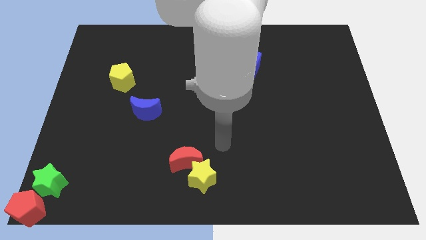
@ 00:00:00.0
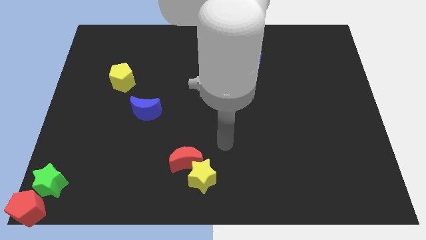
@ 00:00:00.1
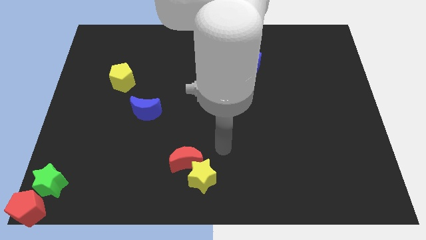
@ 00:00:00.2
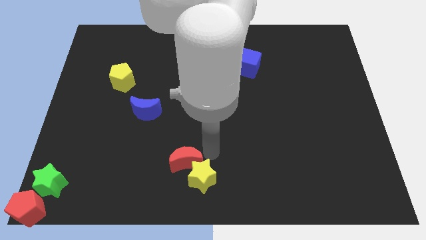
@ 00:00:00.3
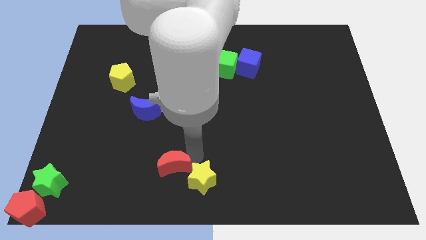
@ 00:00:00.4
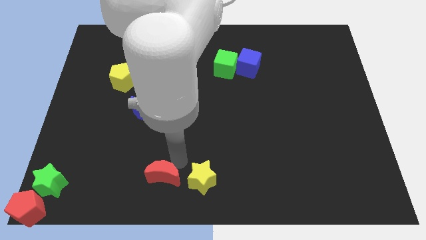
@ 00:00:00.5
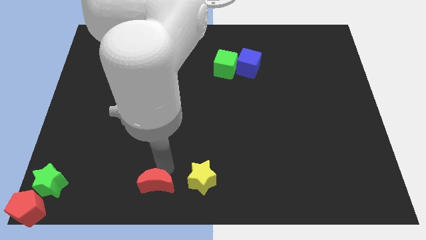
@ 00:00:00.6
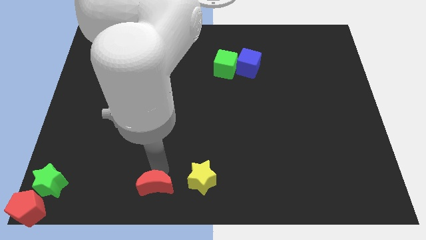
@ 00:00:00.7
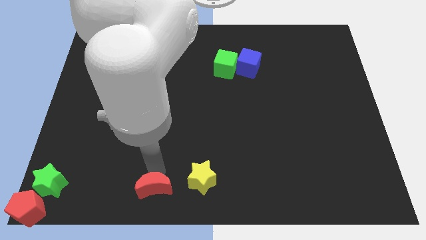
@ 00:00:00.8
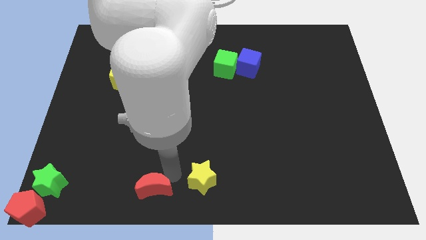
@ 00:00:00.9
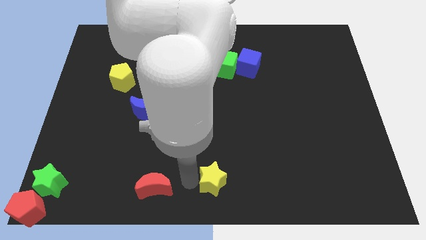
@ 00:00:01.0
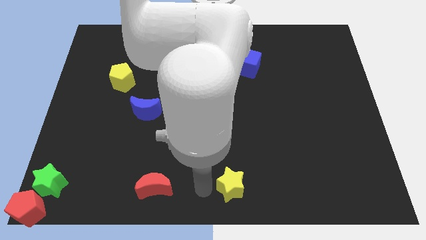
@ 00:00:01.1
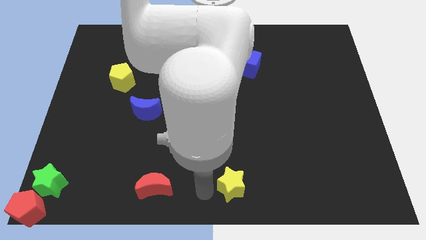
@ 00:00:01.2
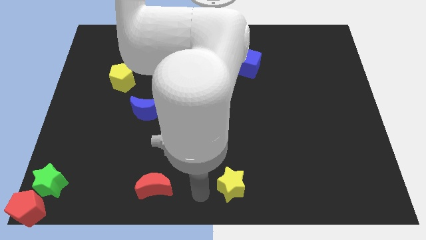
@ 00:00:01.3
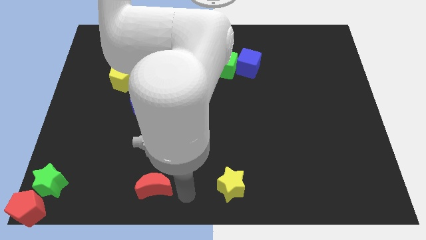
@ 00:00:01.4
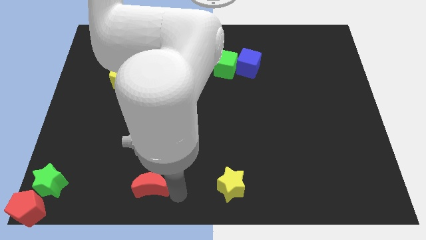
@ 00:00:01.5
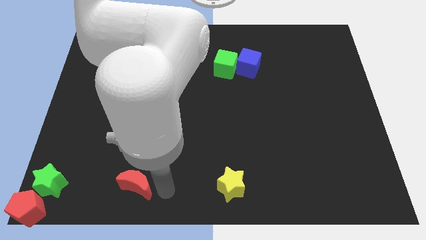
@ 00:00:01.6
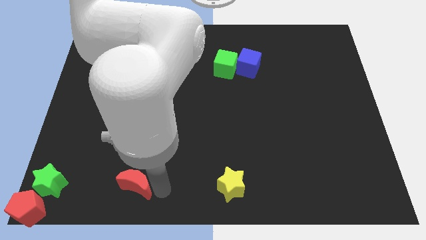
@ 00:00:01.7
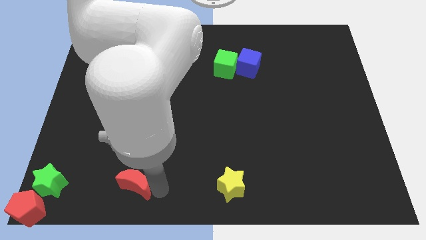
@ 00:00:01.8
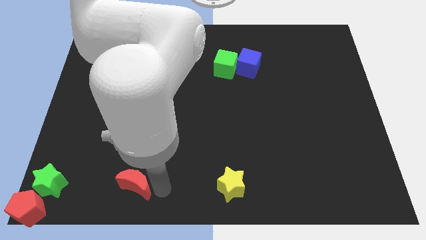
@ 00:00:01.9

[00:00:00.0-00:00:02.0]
separate the yellow star and the red crescent from each other

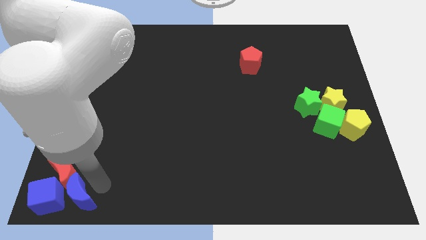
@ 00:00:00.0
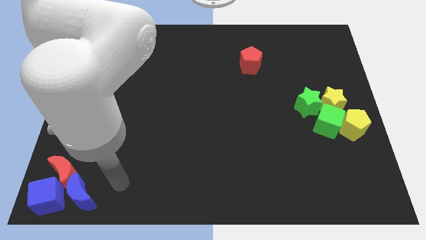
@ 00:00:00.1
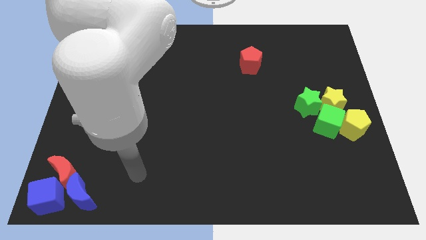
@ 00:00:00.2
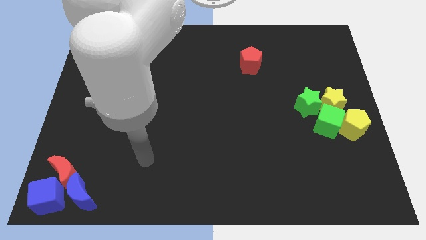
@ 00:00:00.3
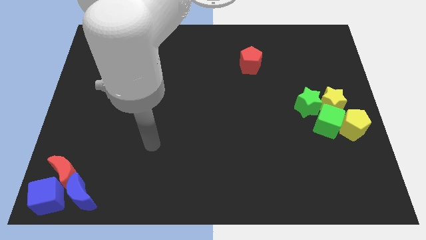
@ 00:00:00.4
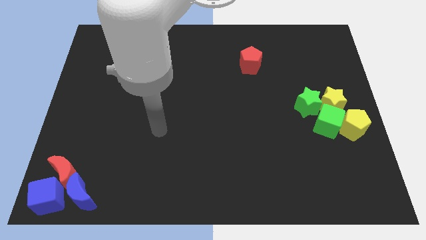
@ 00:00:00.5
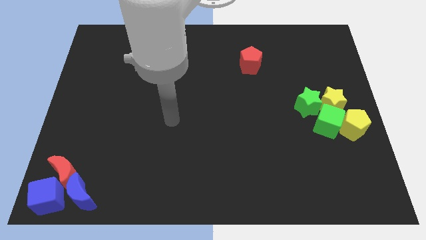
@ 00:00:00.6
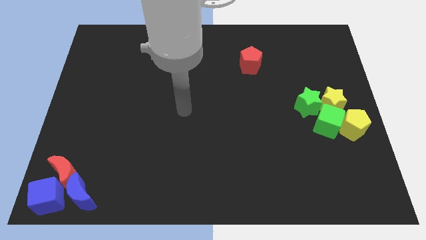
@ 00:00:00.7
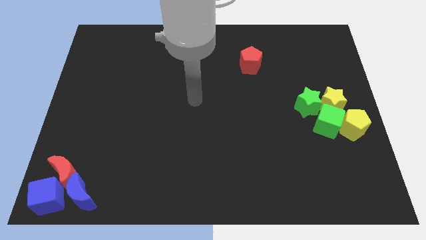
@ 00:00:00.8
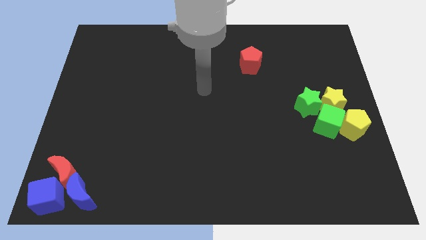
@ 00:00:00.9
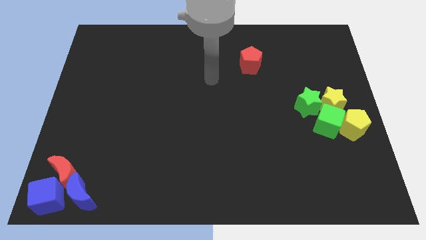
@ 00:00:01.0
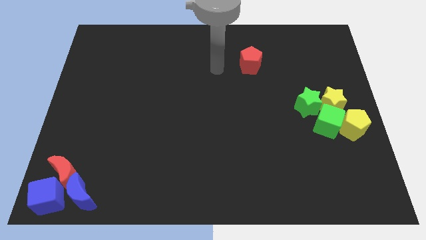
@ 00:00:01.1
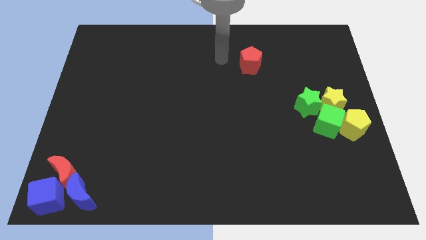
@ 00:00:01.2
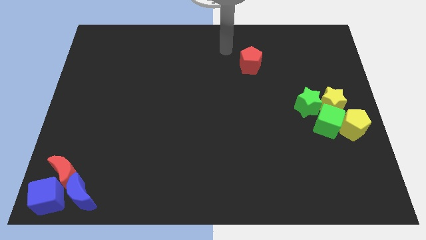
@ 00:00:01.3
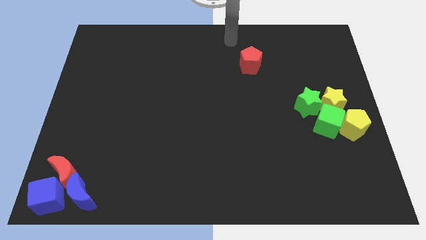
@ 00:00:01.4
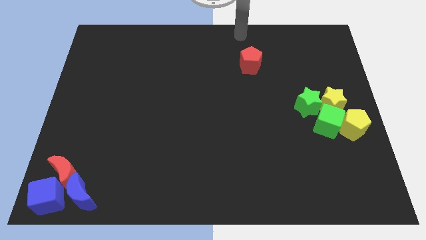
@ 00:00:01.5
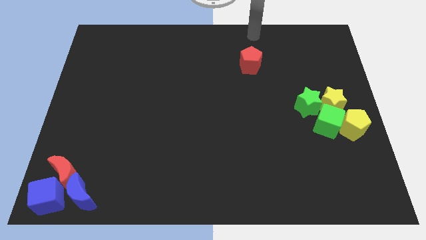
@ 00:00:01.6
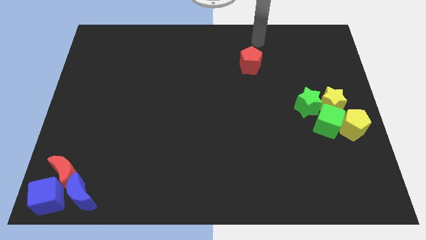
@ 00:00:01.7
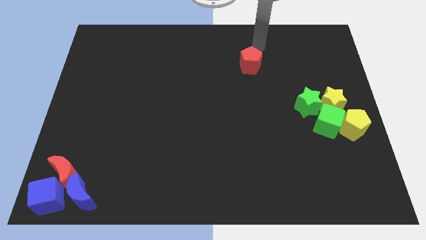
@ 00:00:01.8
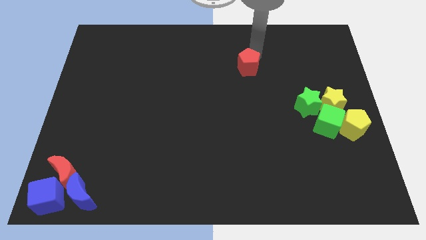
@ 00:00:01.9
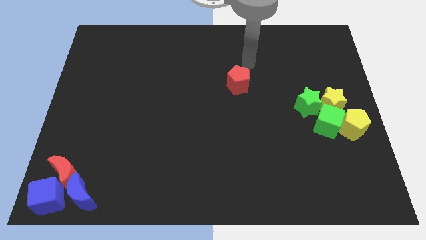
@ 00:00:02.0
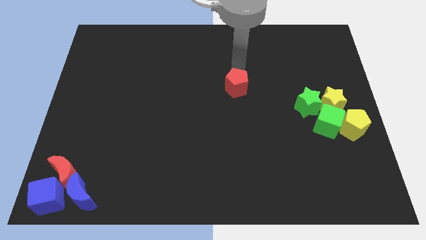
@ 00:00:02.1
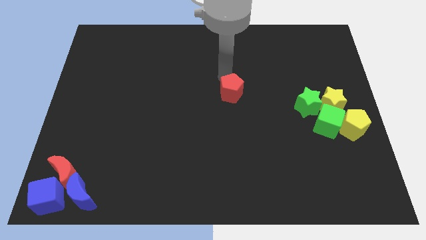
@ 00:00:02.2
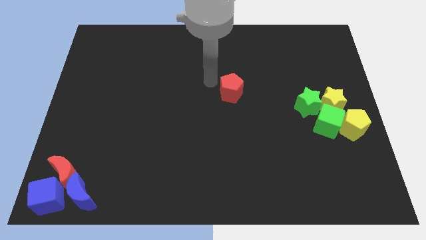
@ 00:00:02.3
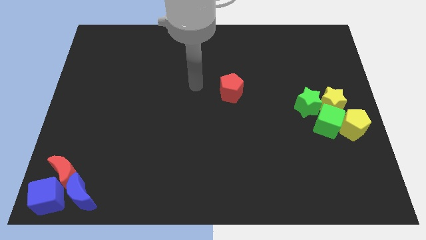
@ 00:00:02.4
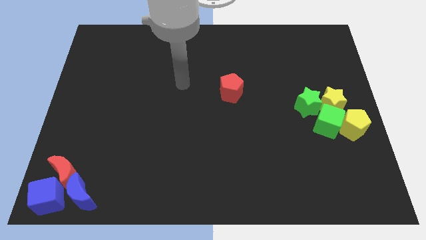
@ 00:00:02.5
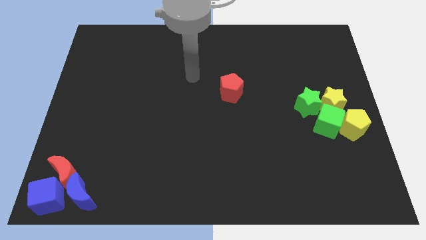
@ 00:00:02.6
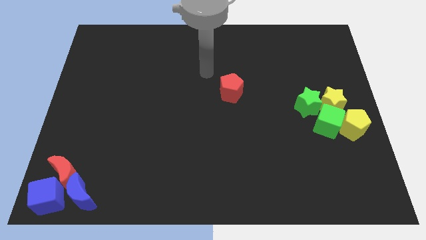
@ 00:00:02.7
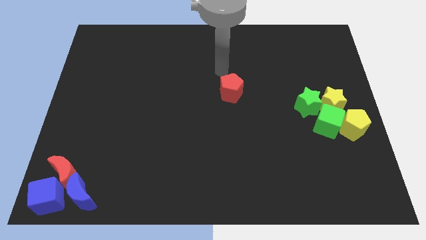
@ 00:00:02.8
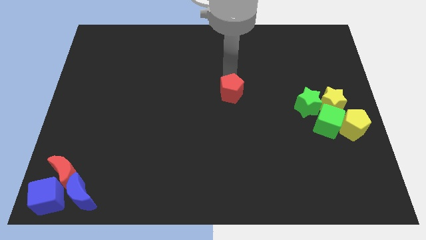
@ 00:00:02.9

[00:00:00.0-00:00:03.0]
move your arm away from the blue moon

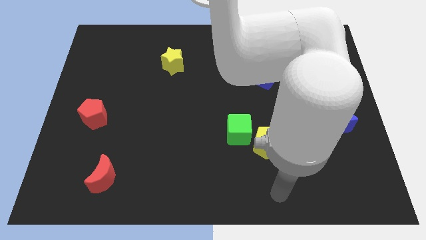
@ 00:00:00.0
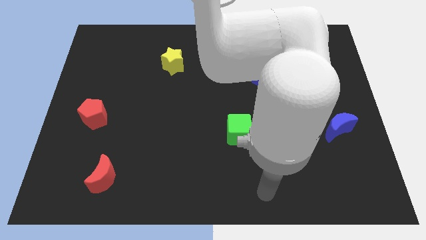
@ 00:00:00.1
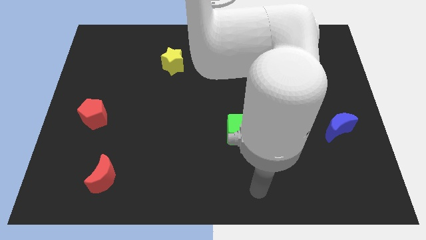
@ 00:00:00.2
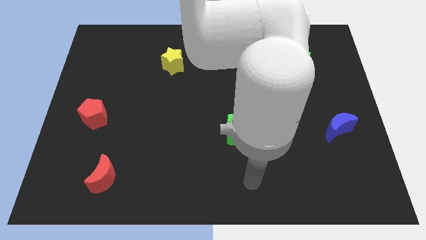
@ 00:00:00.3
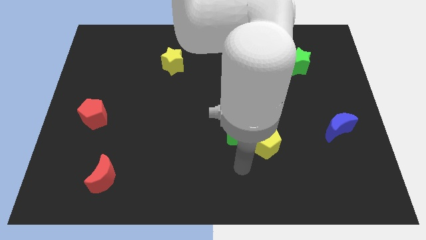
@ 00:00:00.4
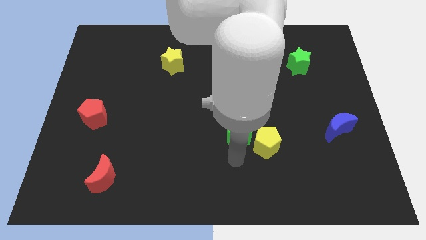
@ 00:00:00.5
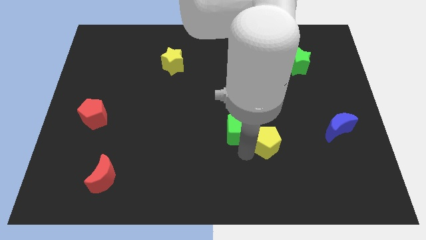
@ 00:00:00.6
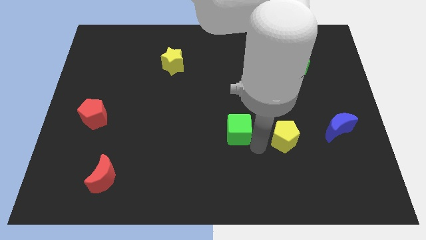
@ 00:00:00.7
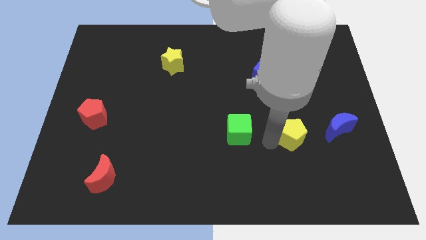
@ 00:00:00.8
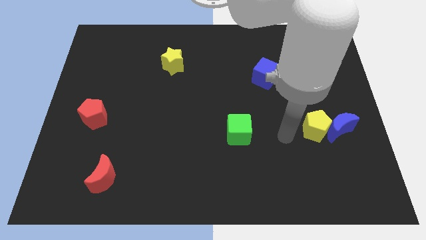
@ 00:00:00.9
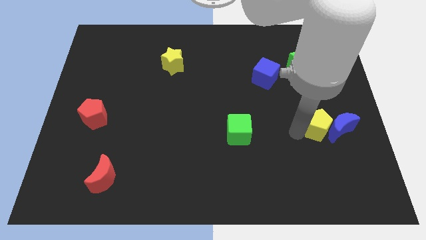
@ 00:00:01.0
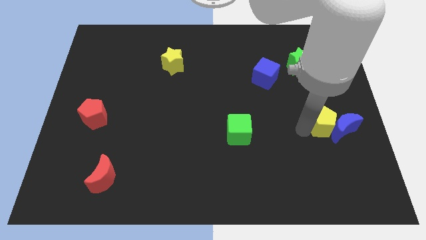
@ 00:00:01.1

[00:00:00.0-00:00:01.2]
separate the yellow pentagon from the green cube

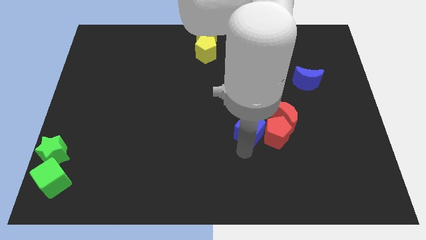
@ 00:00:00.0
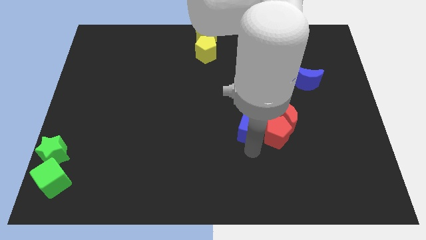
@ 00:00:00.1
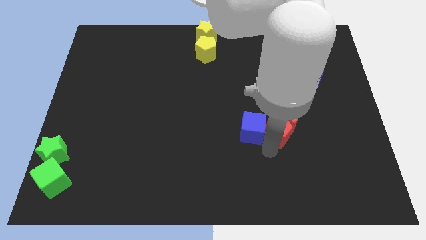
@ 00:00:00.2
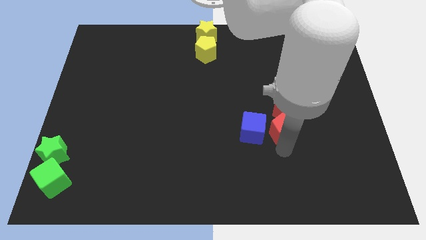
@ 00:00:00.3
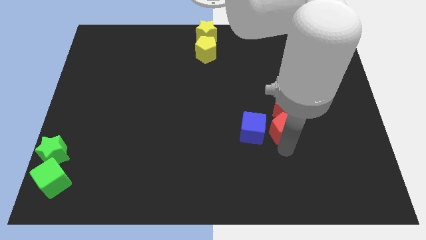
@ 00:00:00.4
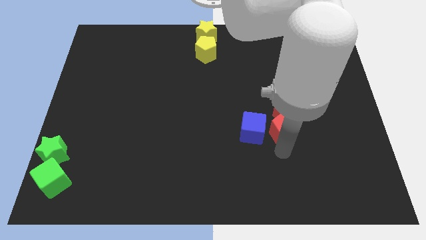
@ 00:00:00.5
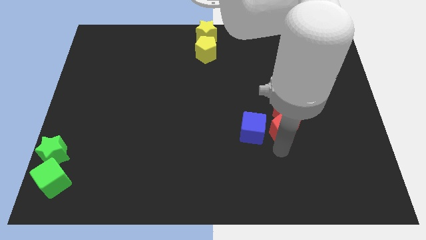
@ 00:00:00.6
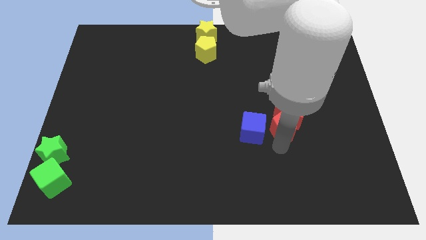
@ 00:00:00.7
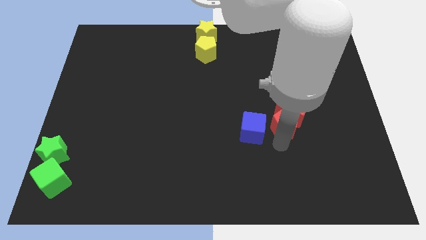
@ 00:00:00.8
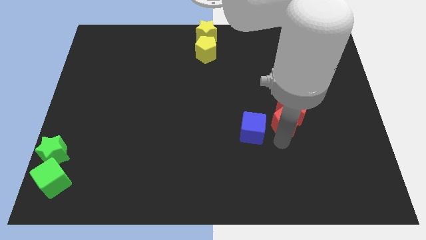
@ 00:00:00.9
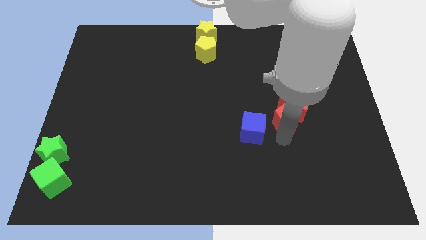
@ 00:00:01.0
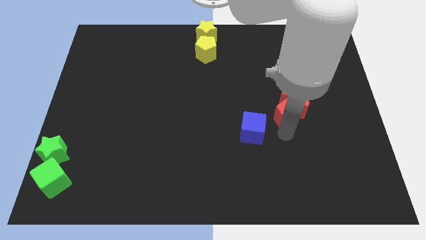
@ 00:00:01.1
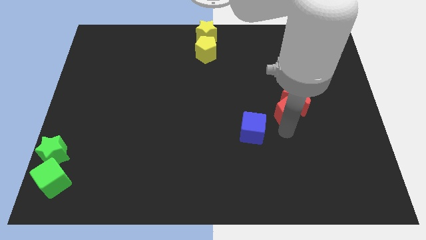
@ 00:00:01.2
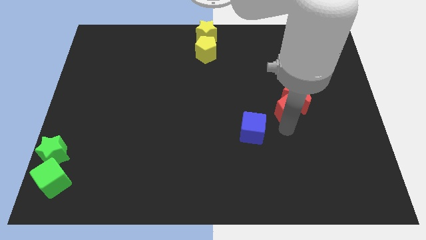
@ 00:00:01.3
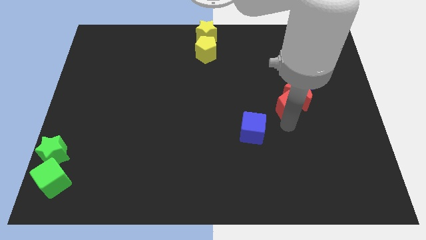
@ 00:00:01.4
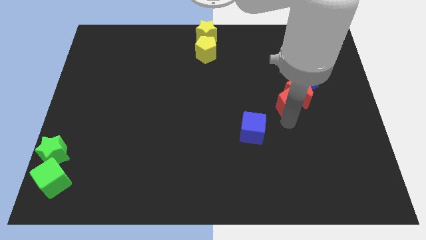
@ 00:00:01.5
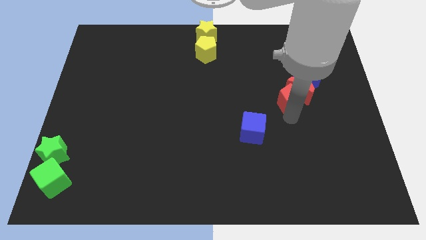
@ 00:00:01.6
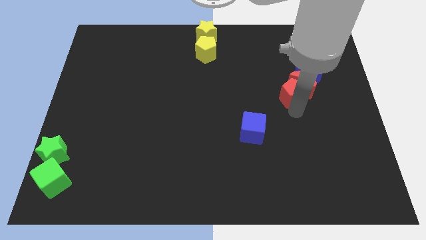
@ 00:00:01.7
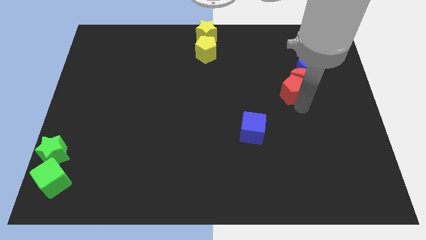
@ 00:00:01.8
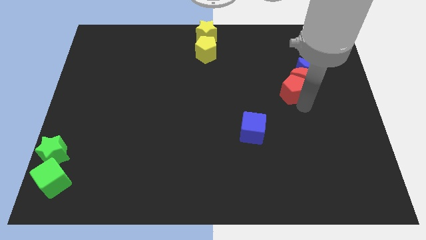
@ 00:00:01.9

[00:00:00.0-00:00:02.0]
push the red pentagon along with the red crescent into the blue moon

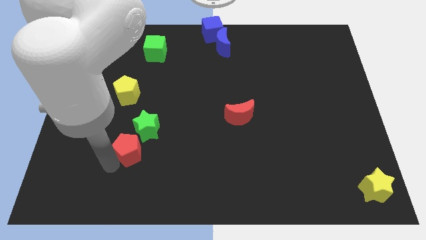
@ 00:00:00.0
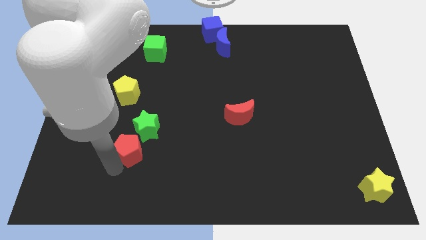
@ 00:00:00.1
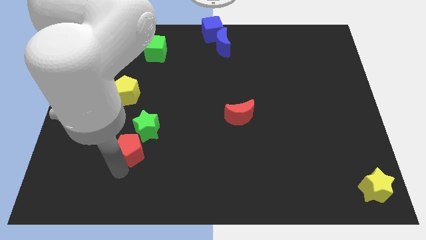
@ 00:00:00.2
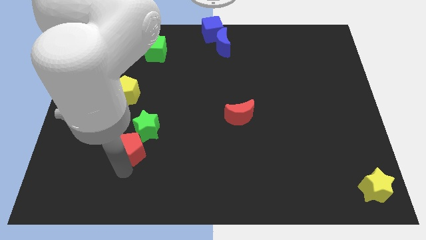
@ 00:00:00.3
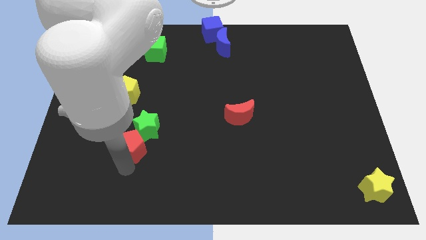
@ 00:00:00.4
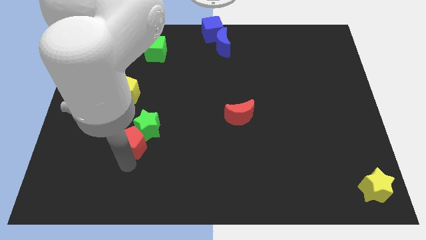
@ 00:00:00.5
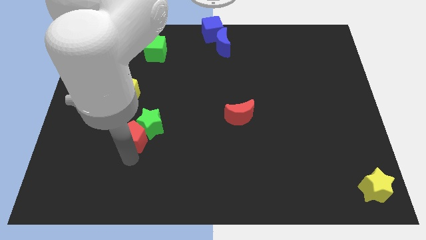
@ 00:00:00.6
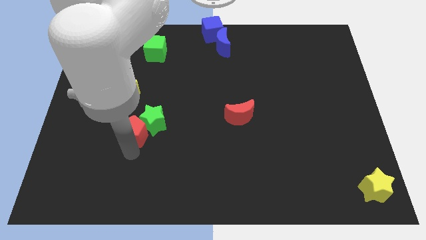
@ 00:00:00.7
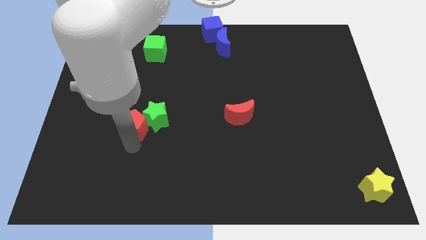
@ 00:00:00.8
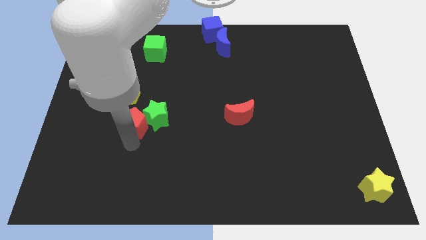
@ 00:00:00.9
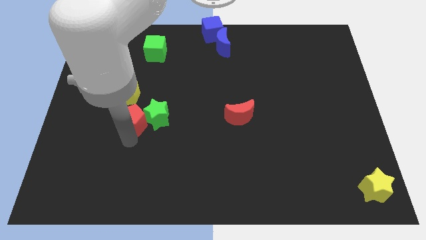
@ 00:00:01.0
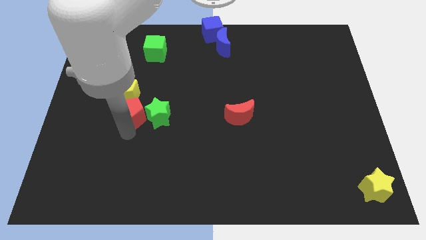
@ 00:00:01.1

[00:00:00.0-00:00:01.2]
place the red pentagon left to the green star
